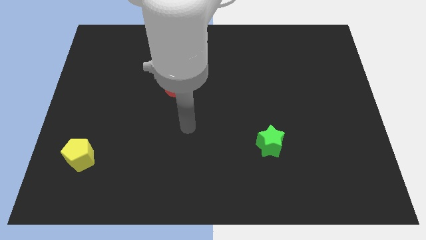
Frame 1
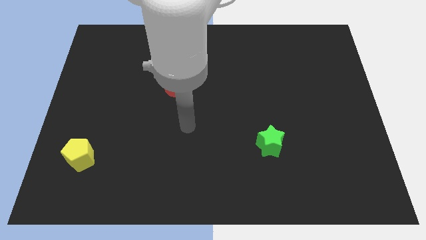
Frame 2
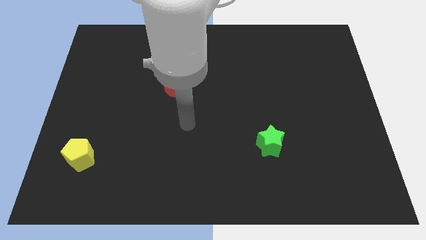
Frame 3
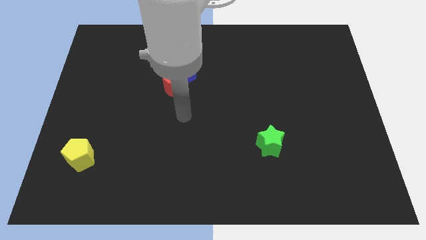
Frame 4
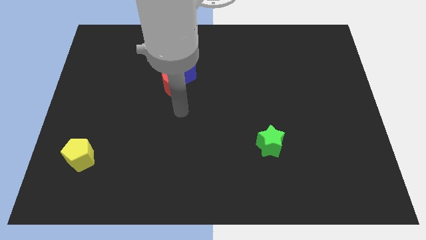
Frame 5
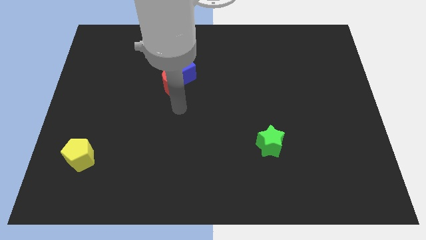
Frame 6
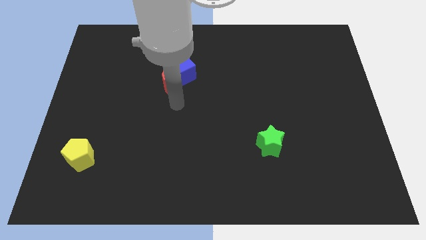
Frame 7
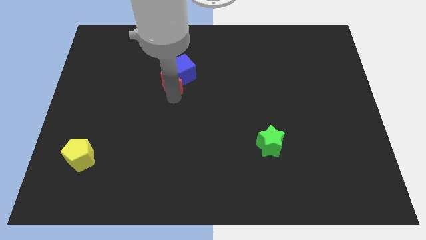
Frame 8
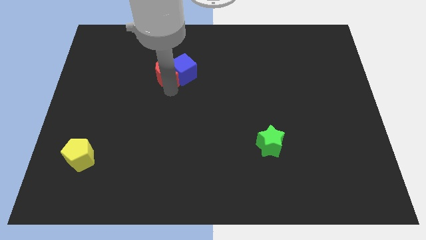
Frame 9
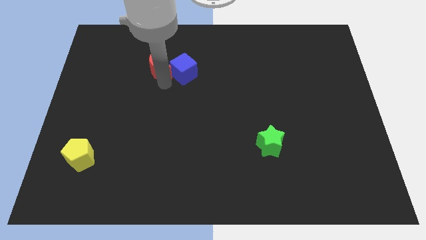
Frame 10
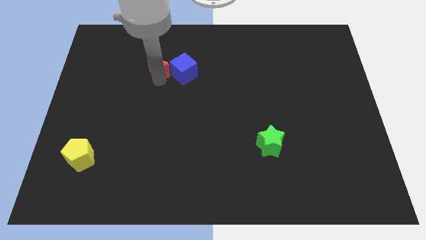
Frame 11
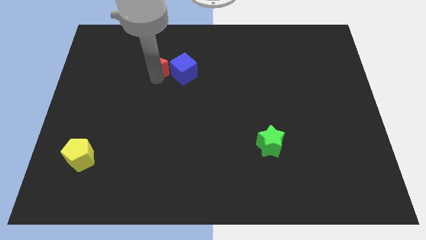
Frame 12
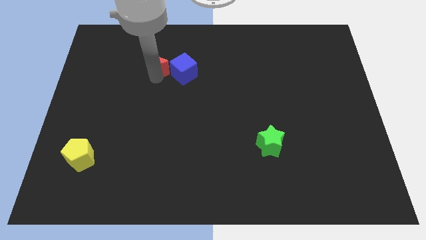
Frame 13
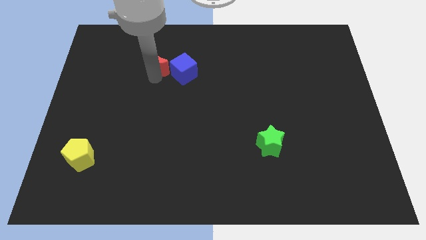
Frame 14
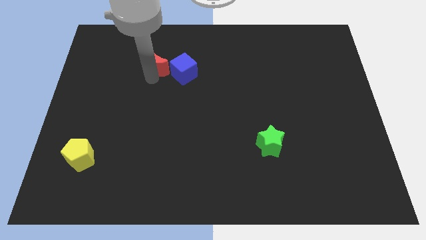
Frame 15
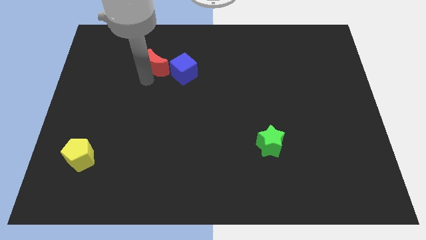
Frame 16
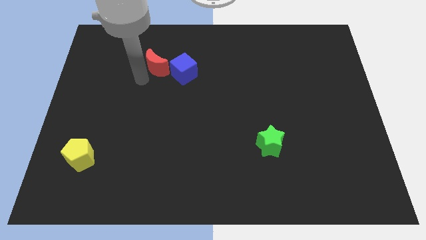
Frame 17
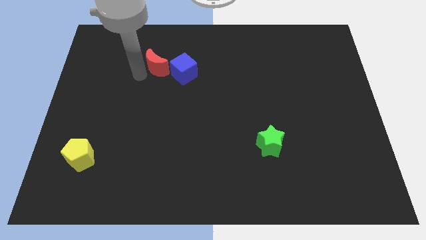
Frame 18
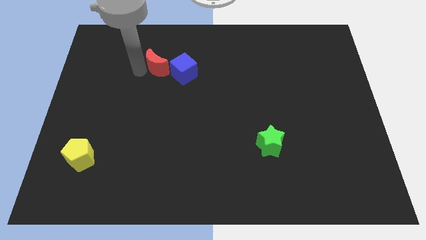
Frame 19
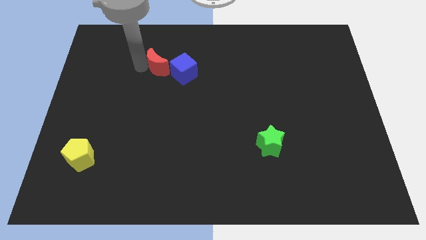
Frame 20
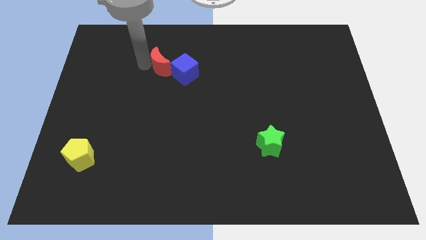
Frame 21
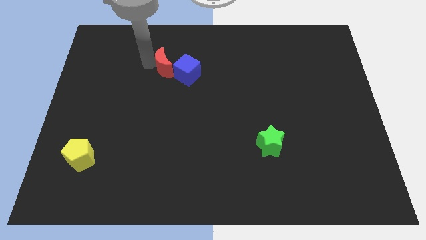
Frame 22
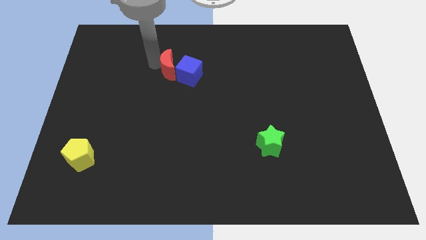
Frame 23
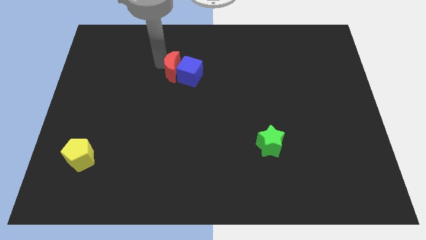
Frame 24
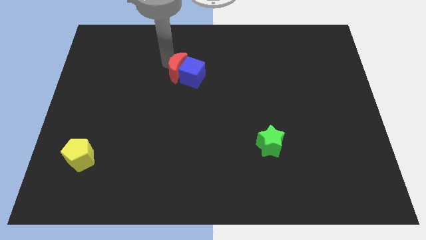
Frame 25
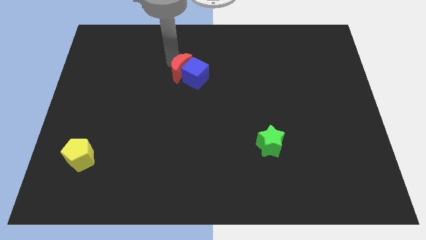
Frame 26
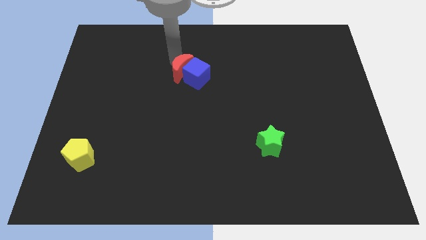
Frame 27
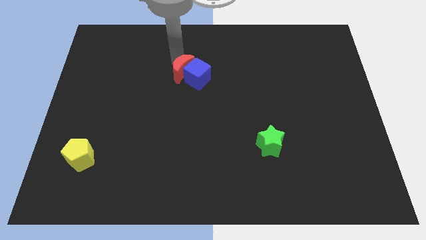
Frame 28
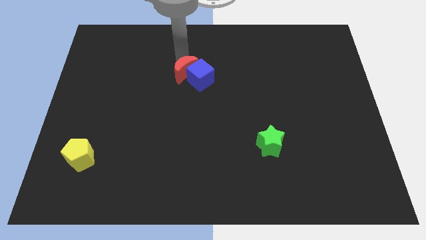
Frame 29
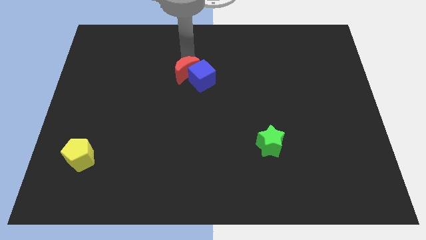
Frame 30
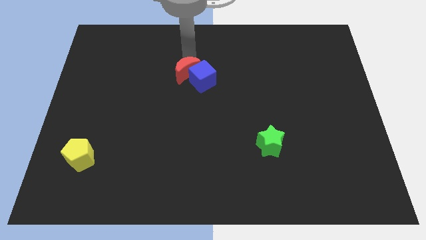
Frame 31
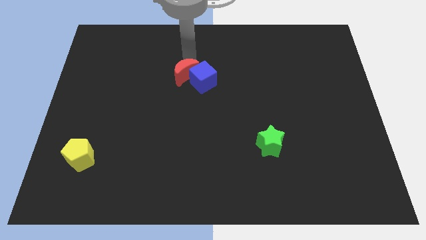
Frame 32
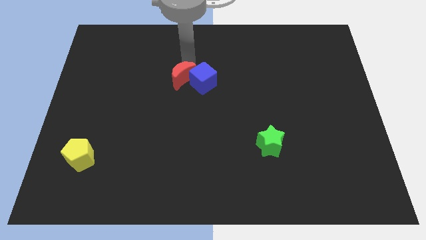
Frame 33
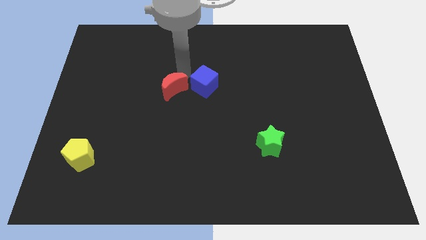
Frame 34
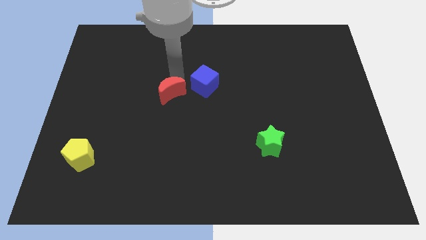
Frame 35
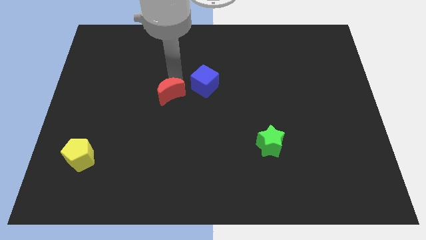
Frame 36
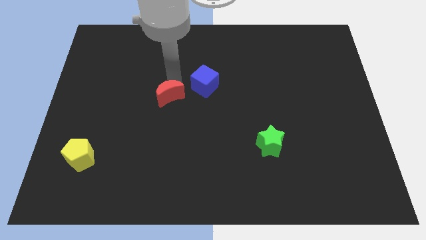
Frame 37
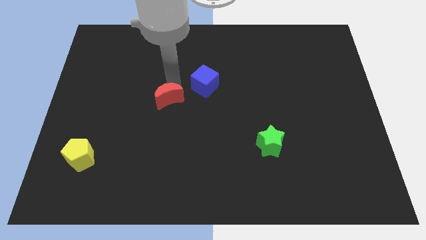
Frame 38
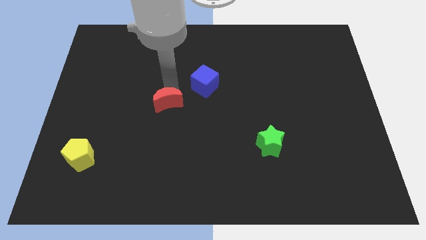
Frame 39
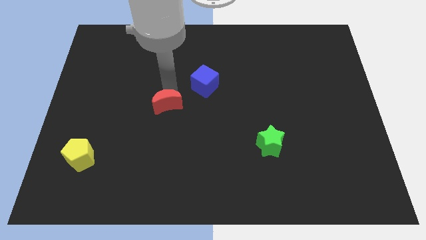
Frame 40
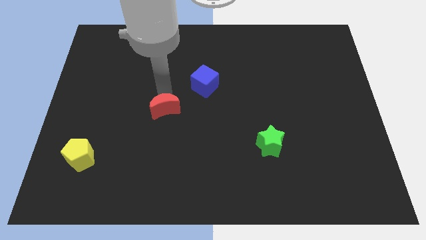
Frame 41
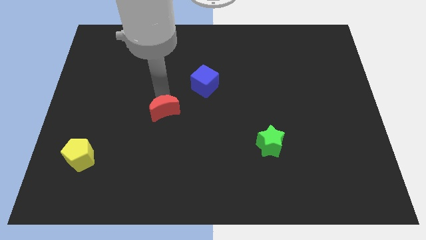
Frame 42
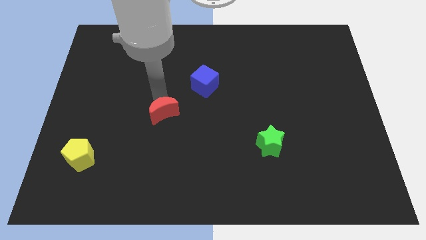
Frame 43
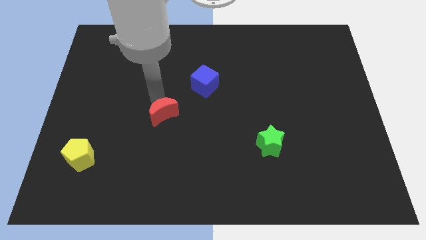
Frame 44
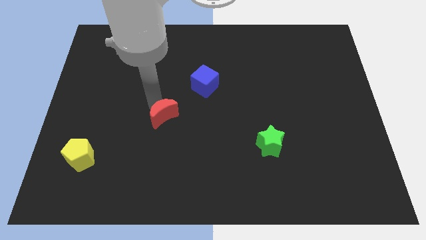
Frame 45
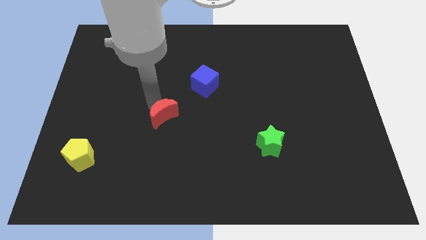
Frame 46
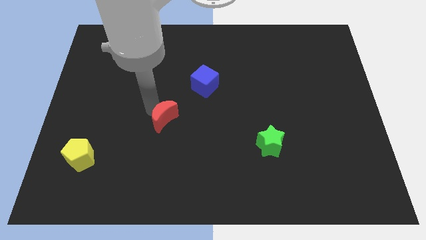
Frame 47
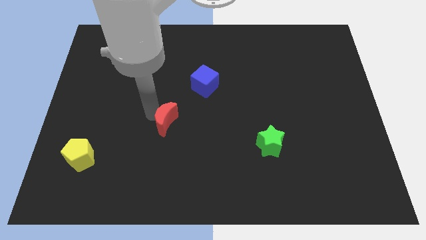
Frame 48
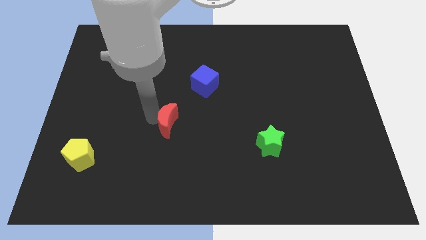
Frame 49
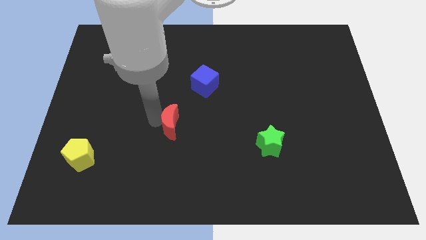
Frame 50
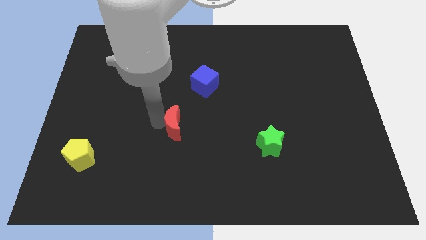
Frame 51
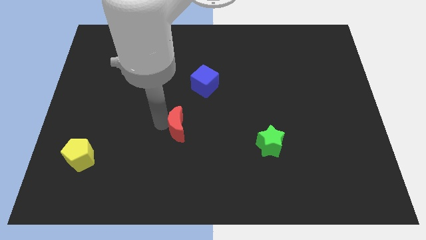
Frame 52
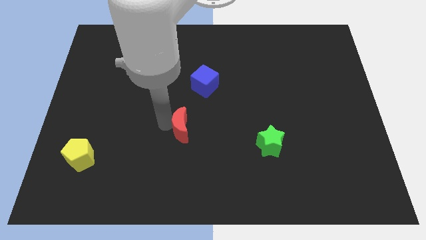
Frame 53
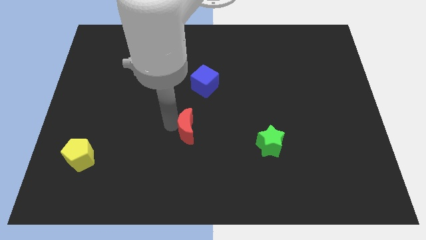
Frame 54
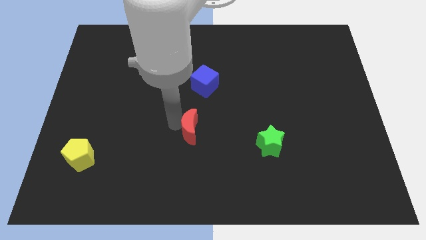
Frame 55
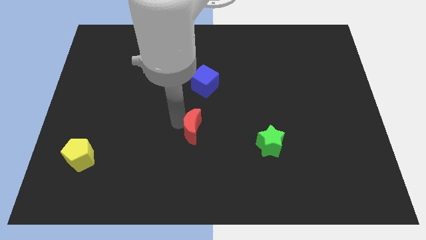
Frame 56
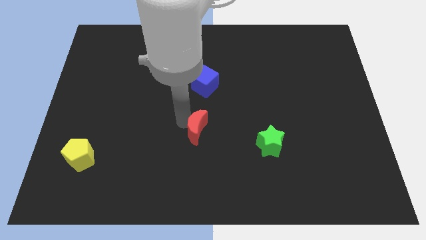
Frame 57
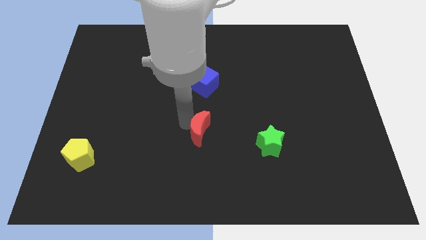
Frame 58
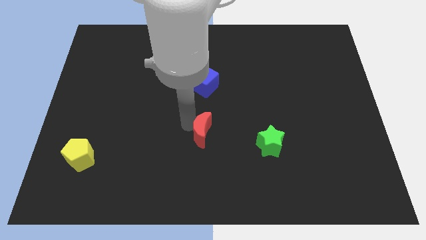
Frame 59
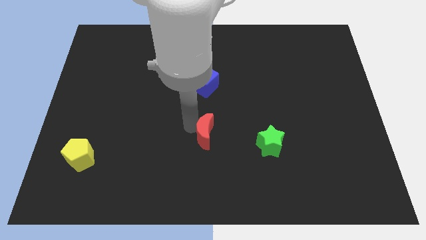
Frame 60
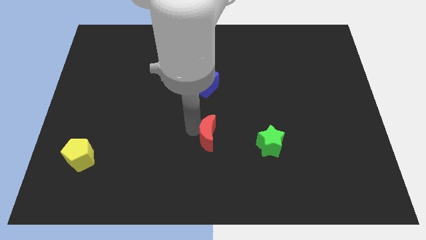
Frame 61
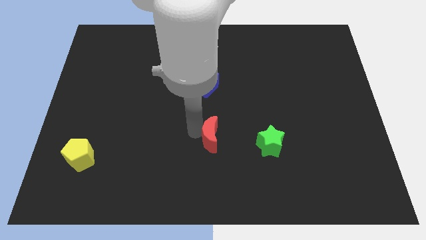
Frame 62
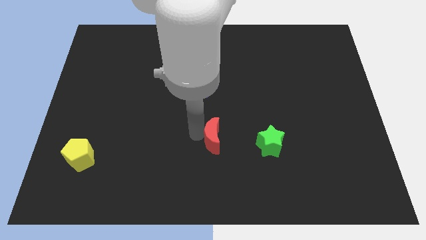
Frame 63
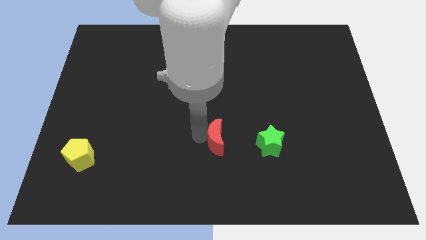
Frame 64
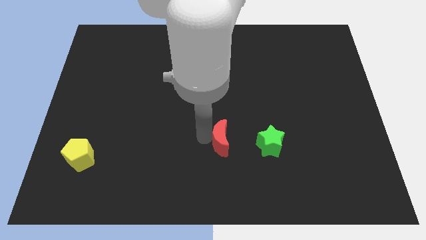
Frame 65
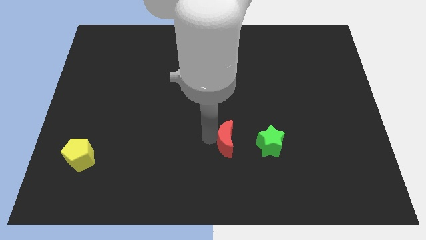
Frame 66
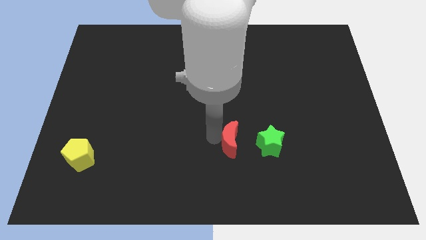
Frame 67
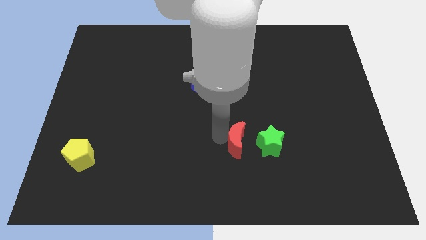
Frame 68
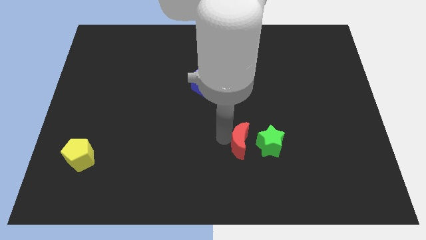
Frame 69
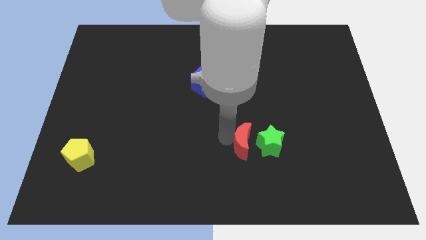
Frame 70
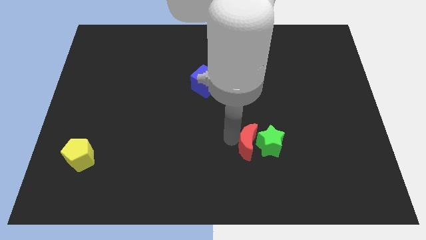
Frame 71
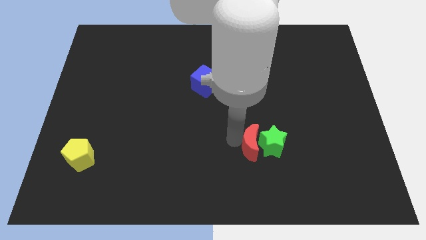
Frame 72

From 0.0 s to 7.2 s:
put the red block to the green block

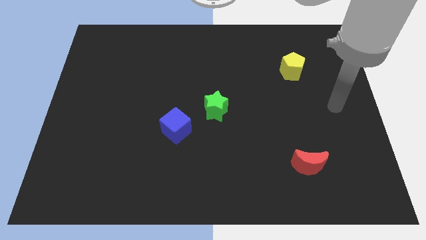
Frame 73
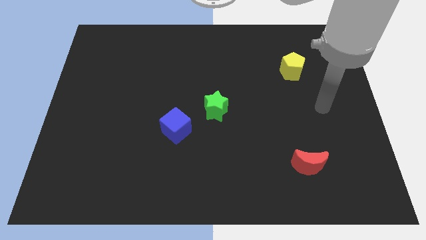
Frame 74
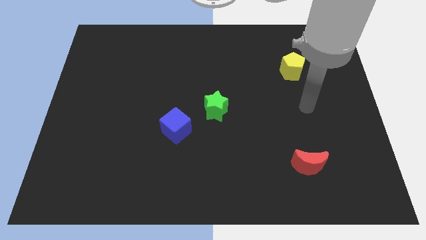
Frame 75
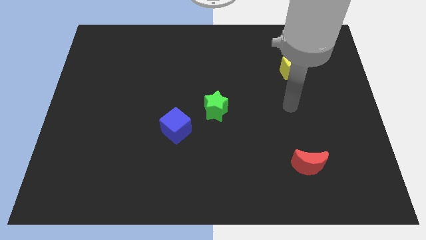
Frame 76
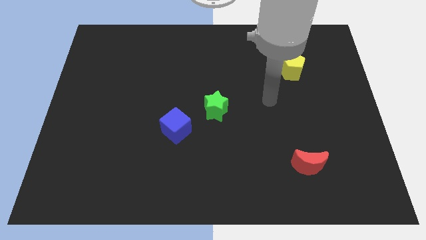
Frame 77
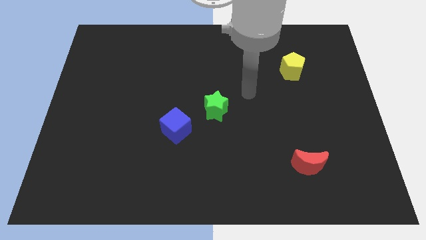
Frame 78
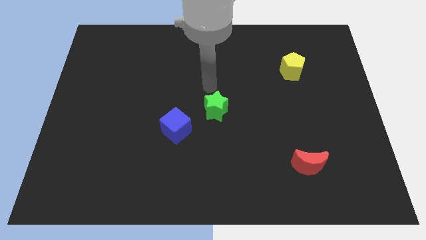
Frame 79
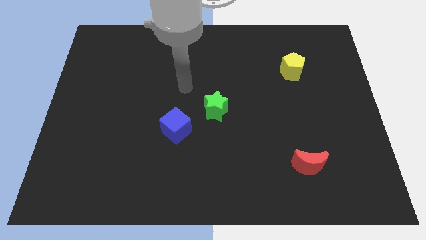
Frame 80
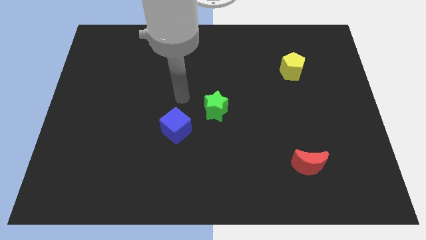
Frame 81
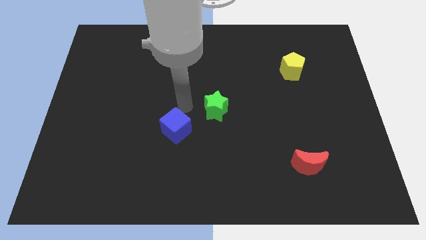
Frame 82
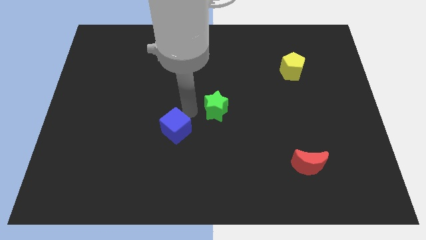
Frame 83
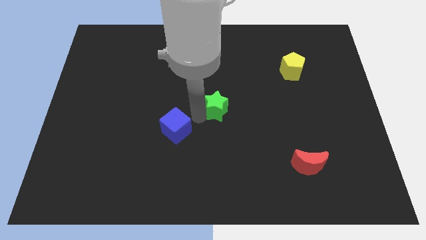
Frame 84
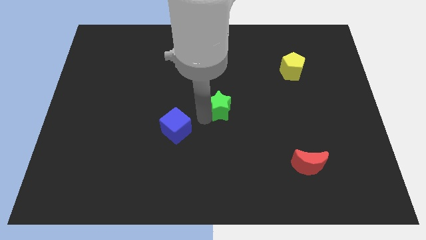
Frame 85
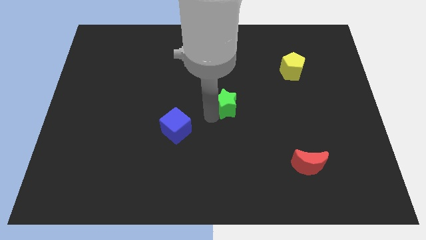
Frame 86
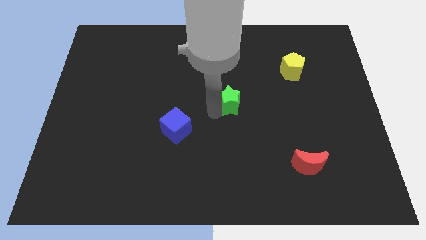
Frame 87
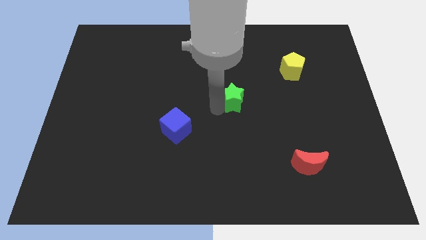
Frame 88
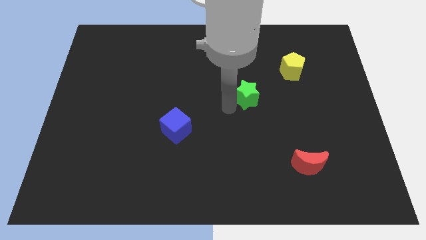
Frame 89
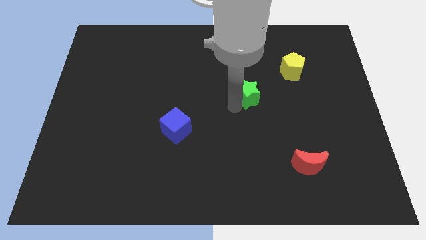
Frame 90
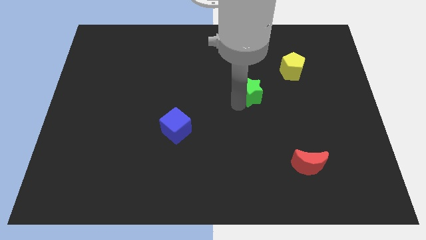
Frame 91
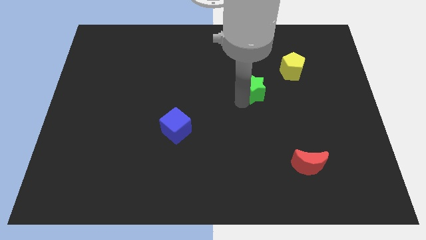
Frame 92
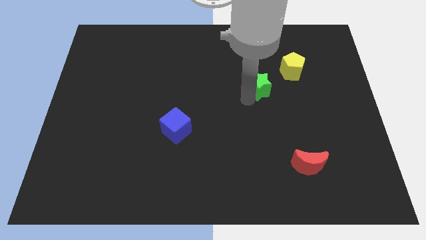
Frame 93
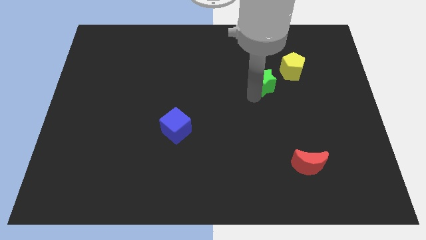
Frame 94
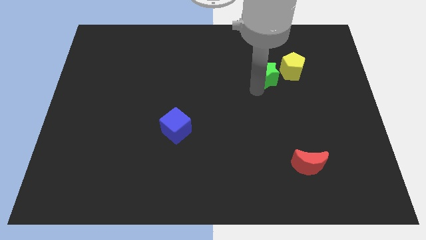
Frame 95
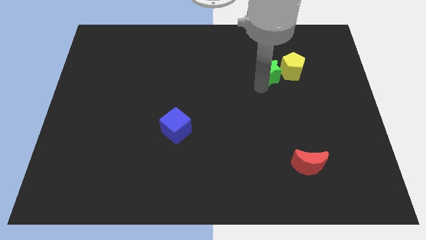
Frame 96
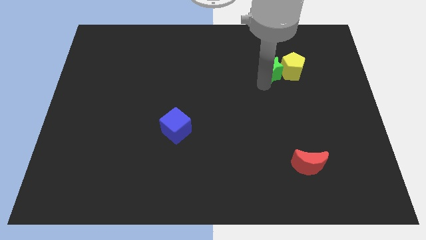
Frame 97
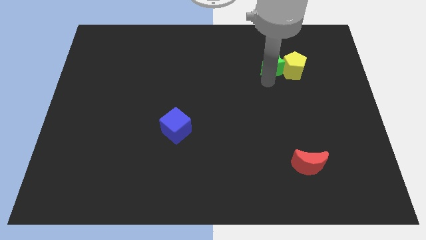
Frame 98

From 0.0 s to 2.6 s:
put the green block to the yellow block
